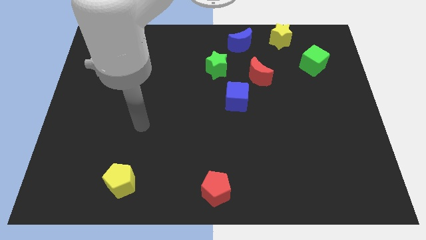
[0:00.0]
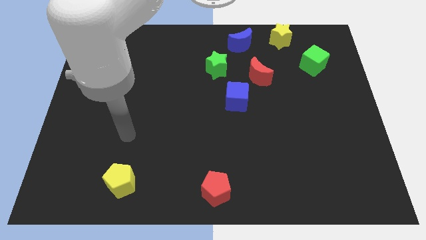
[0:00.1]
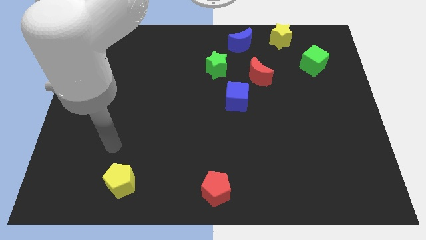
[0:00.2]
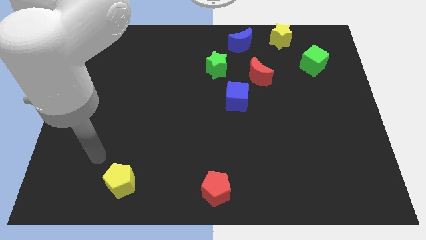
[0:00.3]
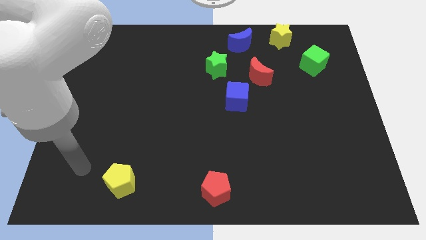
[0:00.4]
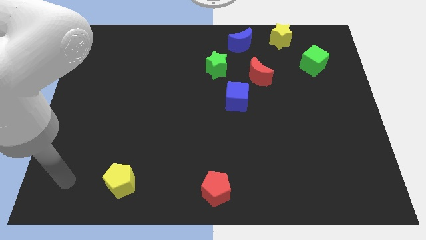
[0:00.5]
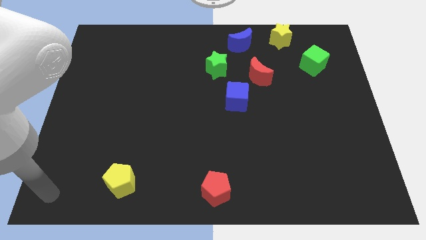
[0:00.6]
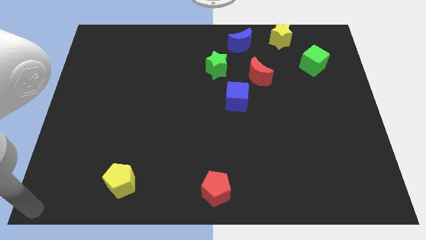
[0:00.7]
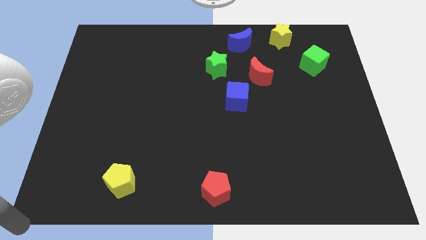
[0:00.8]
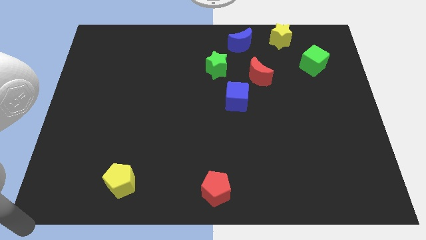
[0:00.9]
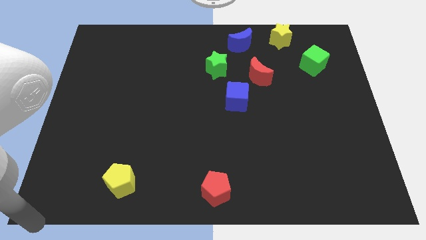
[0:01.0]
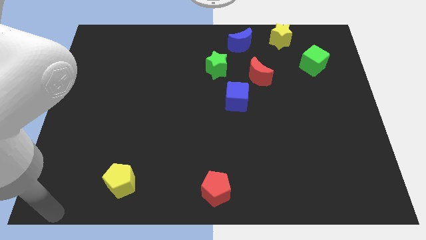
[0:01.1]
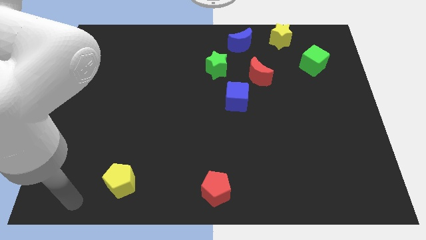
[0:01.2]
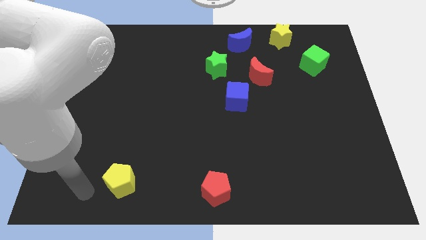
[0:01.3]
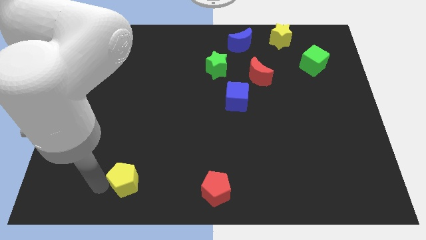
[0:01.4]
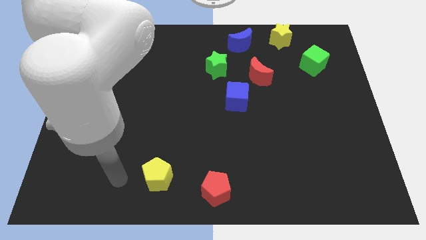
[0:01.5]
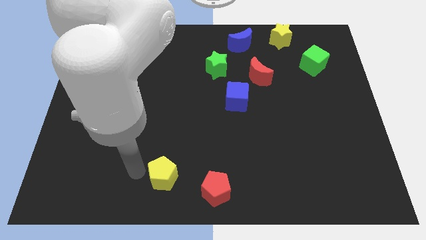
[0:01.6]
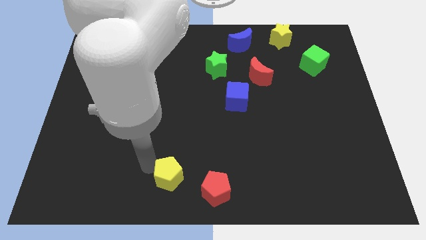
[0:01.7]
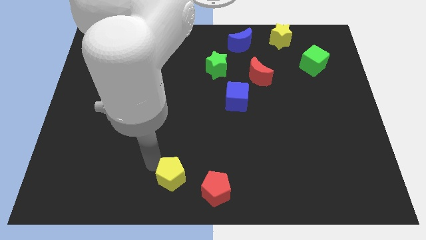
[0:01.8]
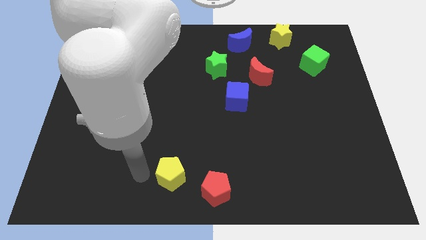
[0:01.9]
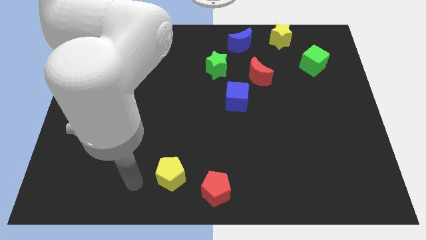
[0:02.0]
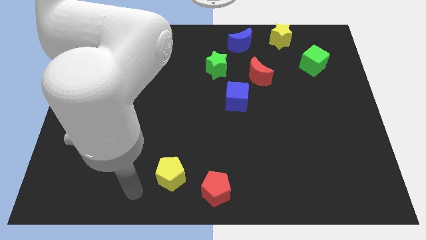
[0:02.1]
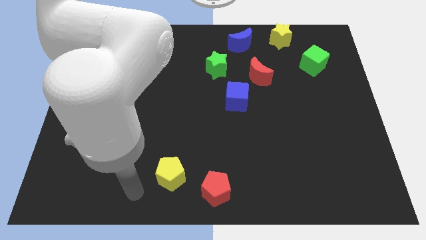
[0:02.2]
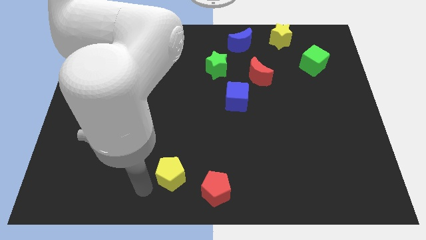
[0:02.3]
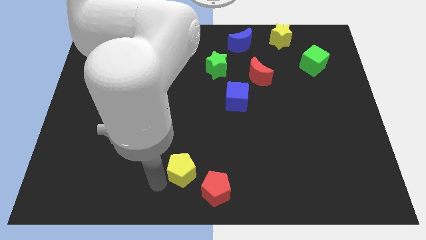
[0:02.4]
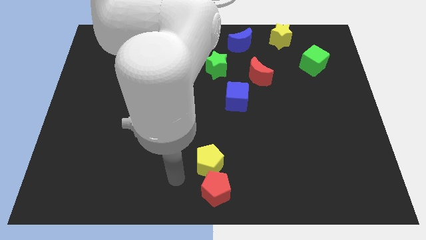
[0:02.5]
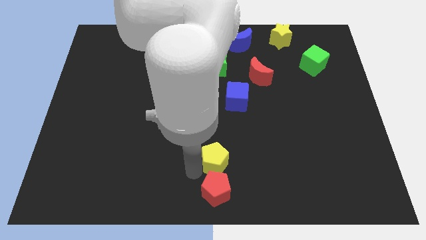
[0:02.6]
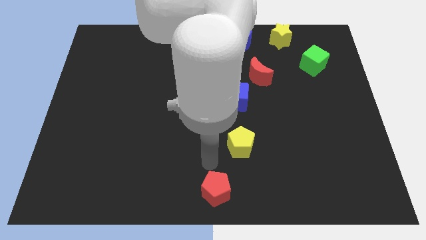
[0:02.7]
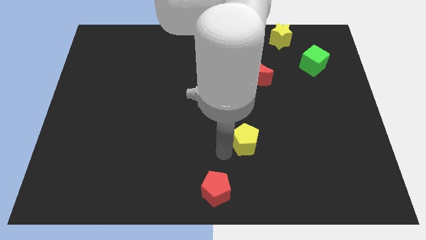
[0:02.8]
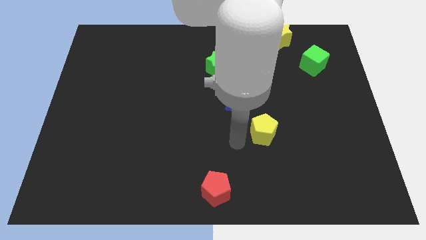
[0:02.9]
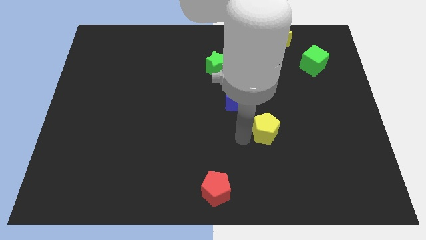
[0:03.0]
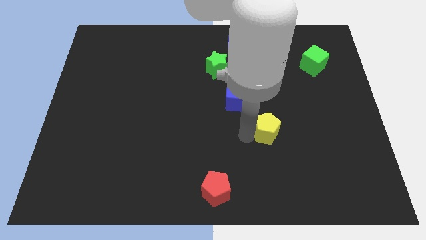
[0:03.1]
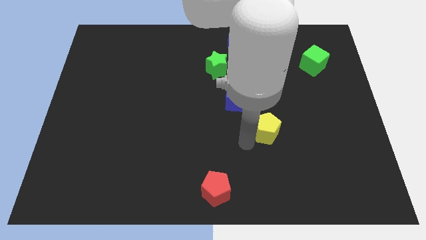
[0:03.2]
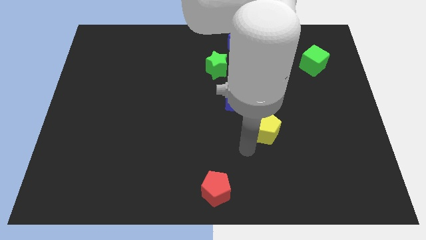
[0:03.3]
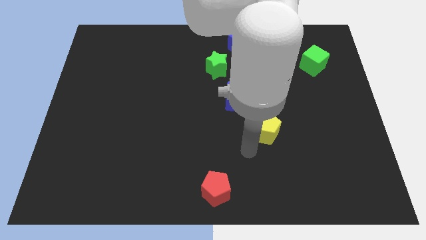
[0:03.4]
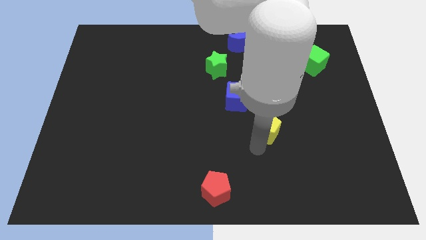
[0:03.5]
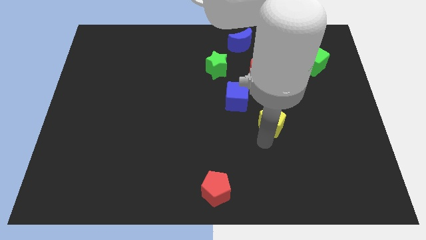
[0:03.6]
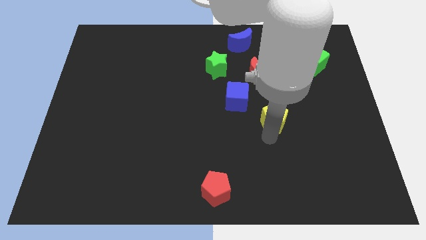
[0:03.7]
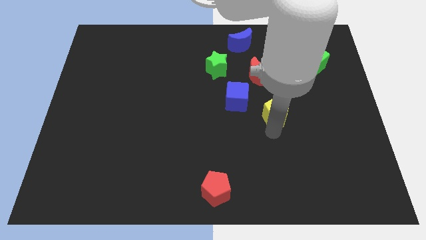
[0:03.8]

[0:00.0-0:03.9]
push the yellow pentagon to the bottom right side of the blue cube

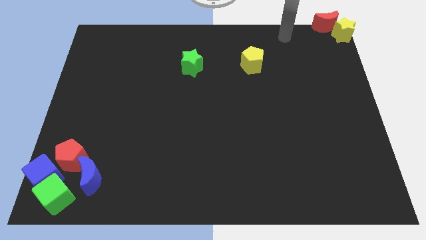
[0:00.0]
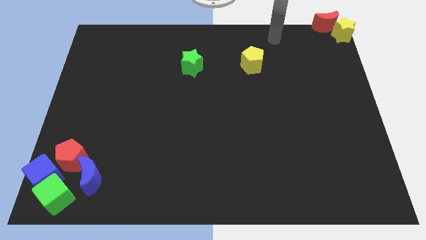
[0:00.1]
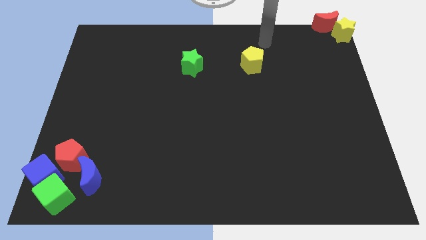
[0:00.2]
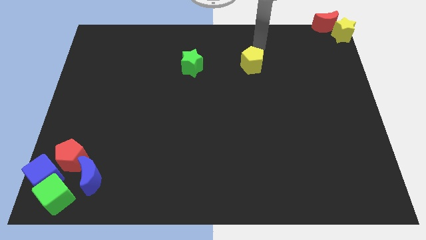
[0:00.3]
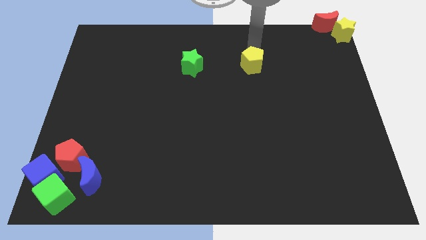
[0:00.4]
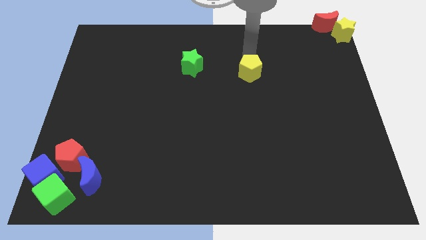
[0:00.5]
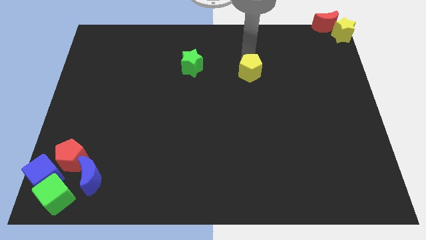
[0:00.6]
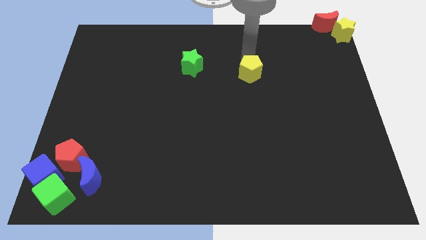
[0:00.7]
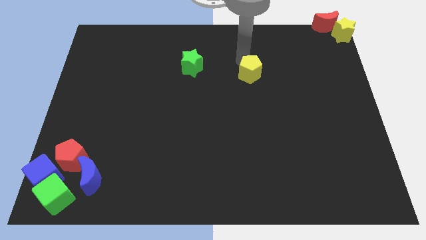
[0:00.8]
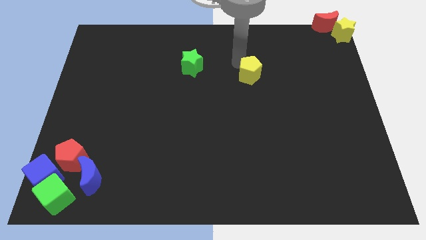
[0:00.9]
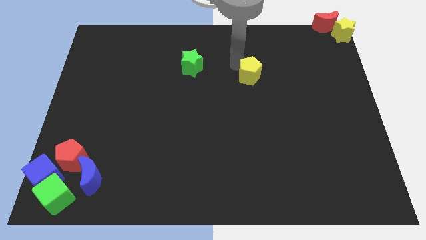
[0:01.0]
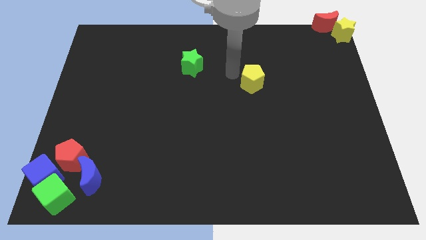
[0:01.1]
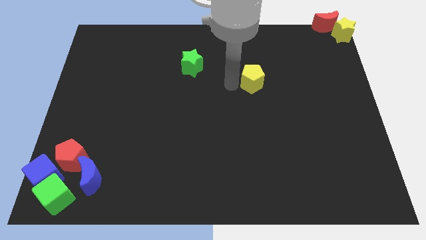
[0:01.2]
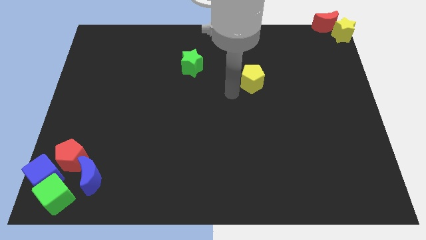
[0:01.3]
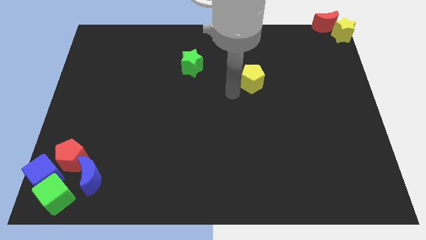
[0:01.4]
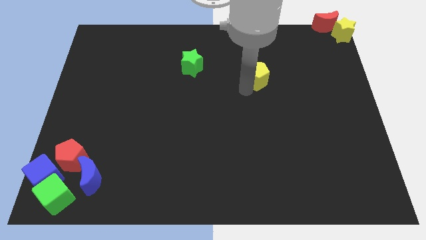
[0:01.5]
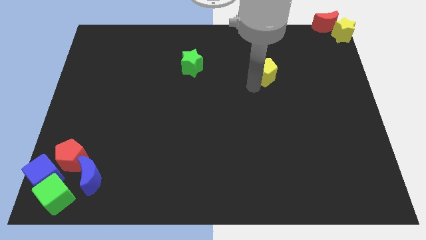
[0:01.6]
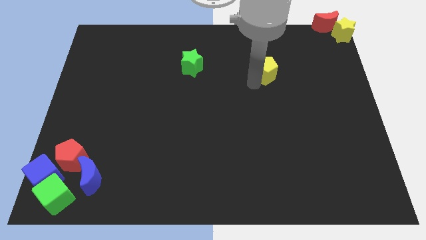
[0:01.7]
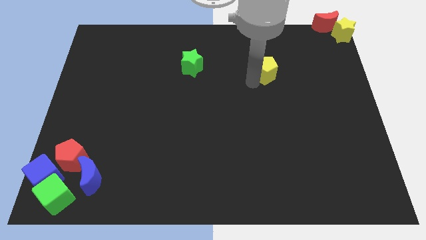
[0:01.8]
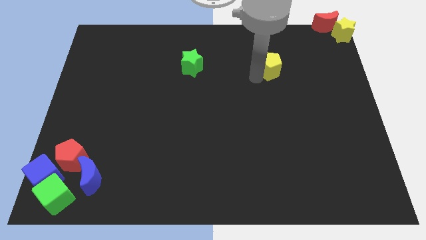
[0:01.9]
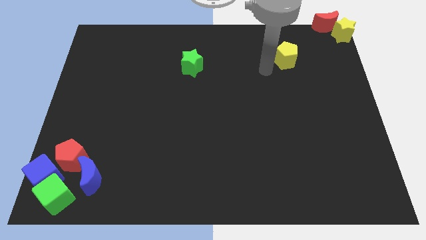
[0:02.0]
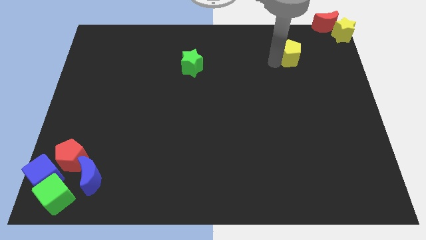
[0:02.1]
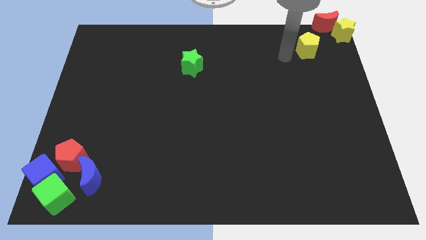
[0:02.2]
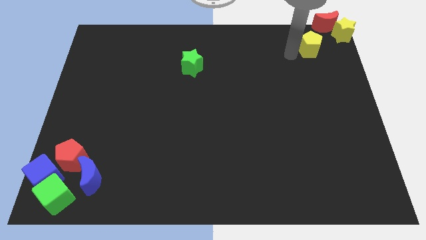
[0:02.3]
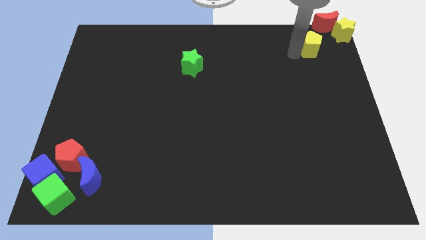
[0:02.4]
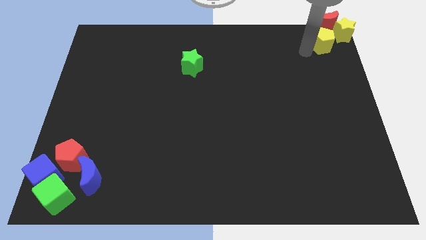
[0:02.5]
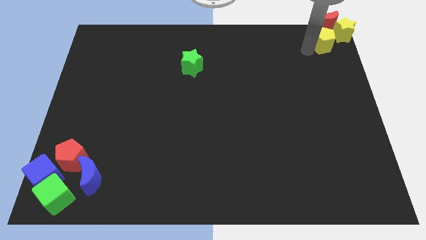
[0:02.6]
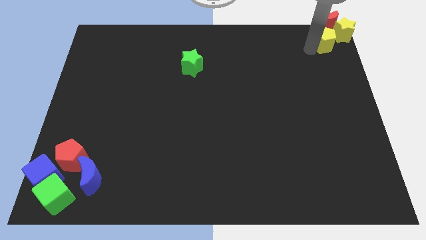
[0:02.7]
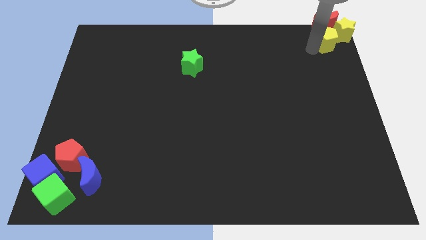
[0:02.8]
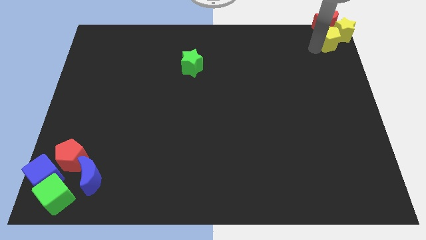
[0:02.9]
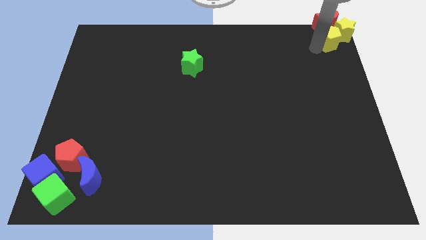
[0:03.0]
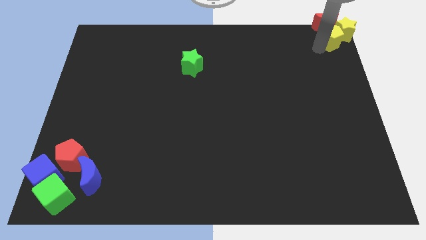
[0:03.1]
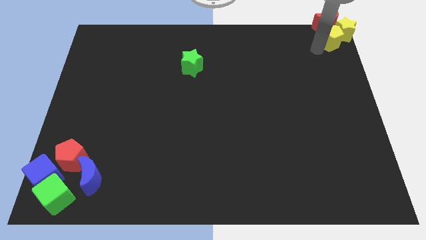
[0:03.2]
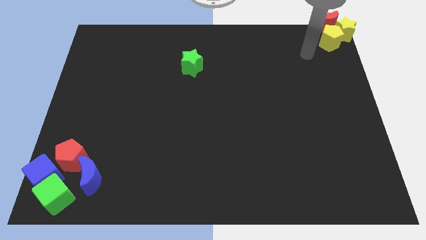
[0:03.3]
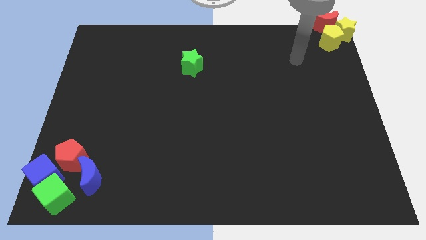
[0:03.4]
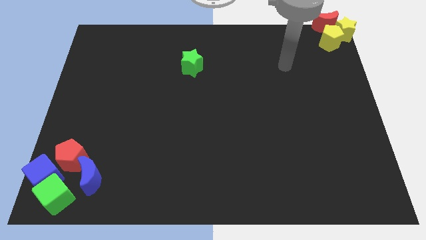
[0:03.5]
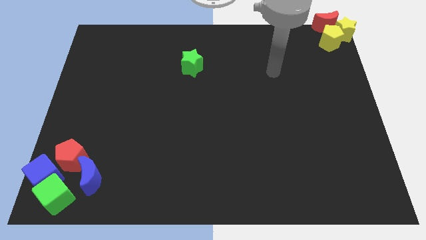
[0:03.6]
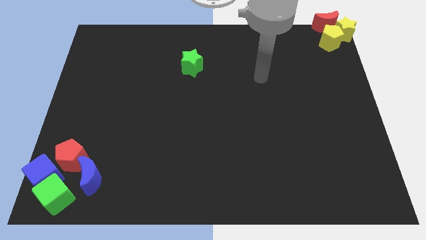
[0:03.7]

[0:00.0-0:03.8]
place the yellow pentagon bottom to red crescent

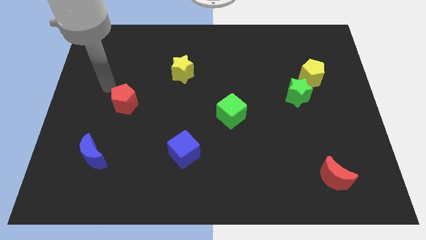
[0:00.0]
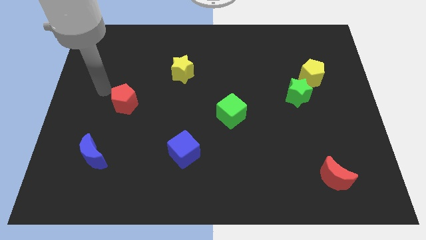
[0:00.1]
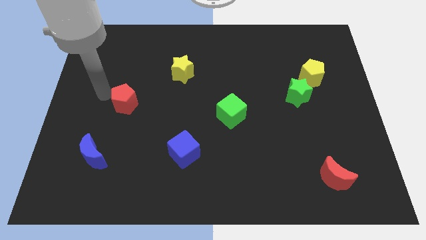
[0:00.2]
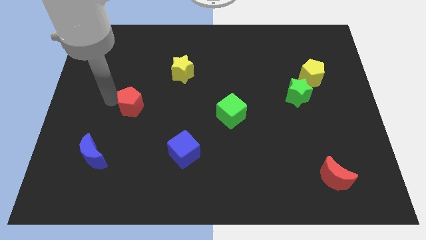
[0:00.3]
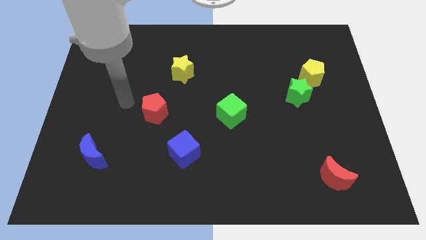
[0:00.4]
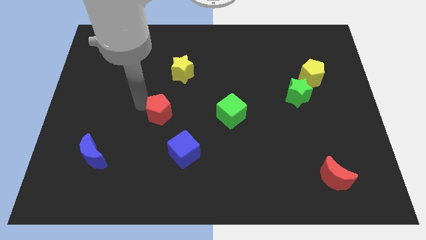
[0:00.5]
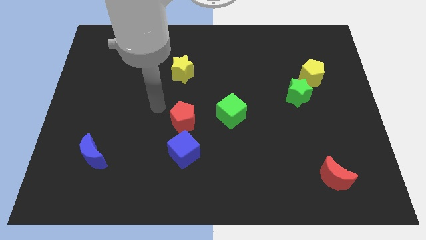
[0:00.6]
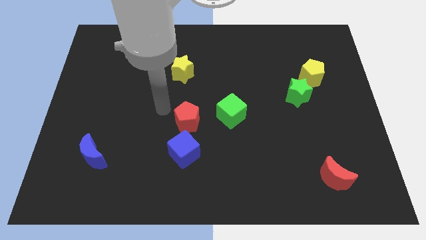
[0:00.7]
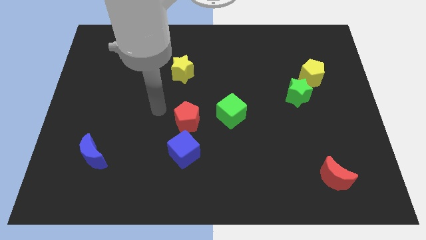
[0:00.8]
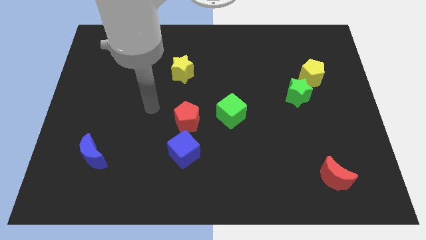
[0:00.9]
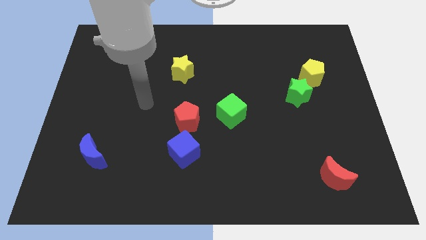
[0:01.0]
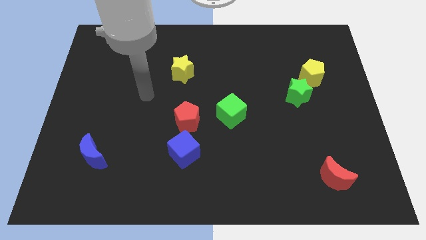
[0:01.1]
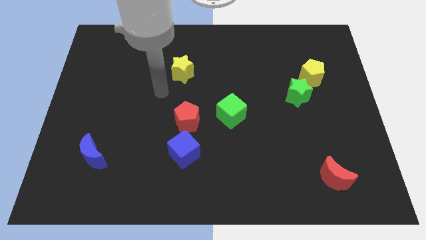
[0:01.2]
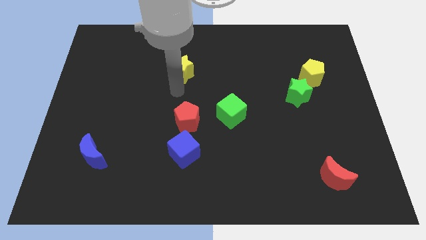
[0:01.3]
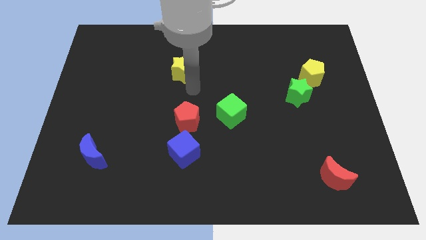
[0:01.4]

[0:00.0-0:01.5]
place the arm close to the yellow star
